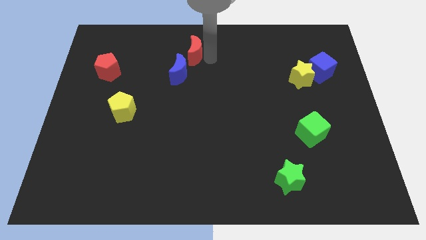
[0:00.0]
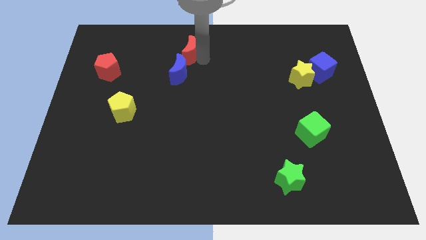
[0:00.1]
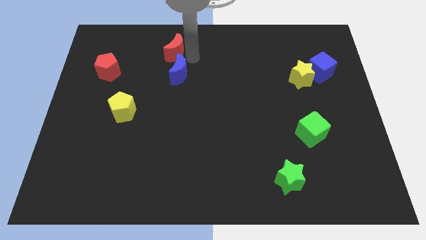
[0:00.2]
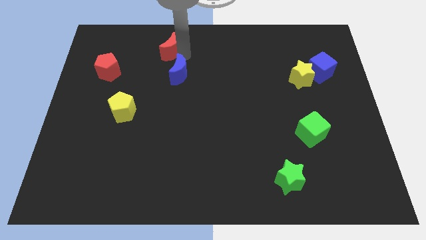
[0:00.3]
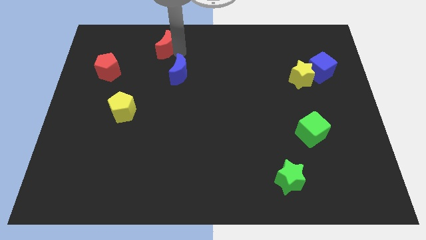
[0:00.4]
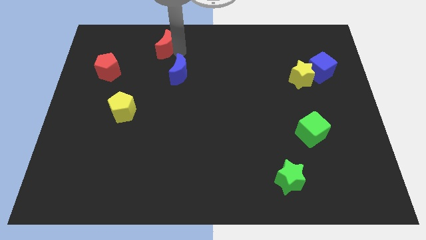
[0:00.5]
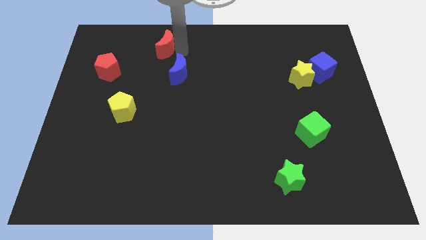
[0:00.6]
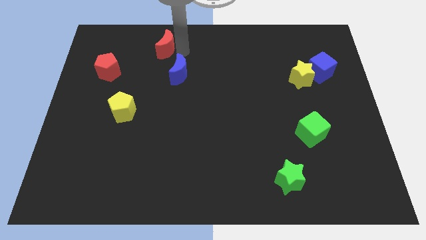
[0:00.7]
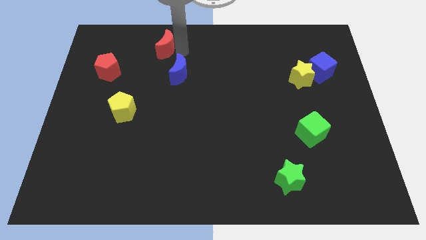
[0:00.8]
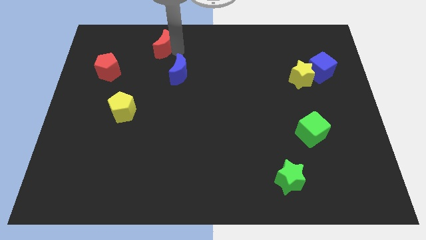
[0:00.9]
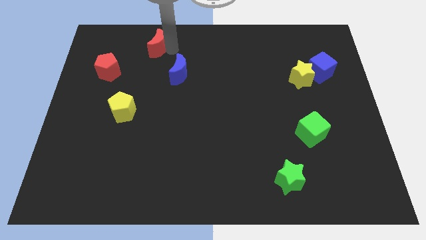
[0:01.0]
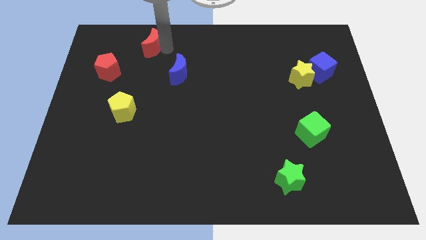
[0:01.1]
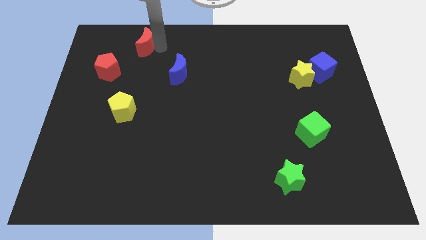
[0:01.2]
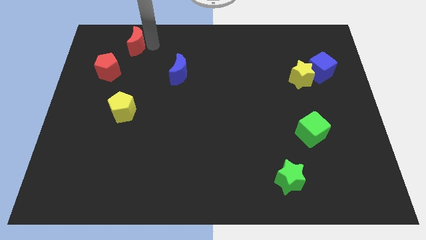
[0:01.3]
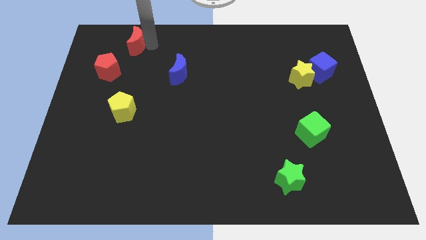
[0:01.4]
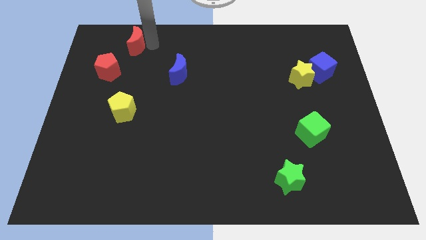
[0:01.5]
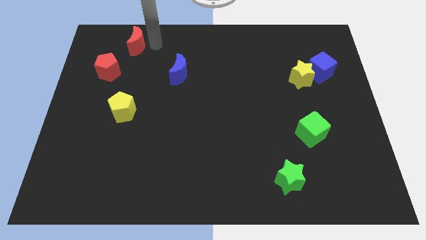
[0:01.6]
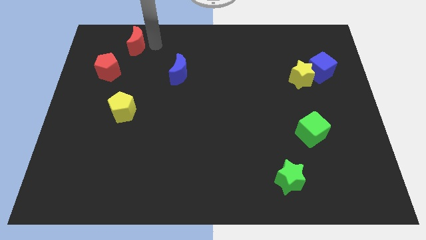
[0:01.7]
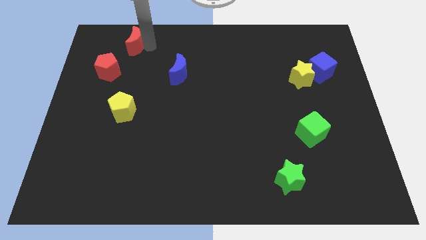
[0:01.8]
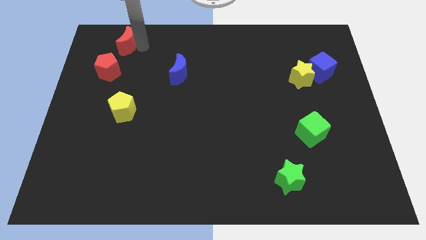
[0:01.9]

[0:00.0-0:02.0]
push the red crescent to the top right of the red pentagon

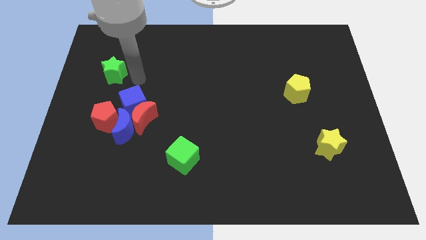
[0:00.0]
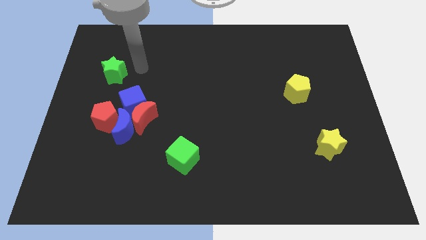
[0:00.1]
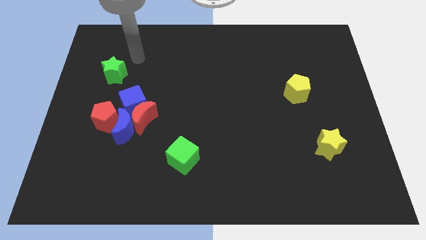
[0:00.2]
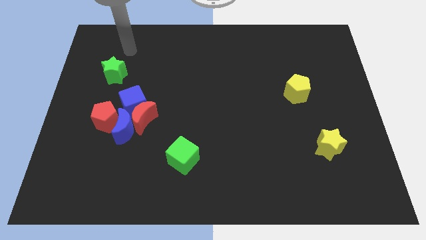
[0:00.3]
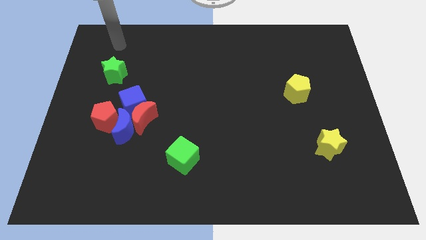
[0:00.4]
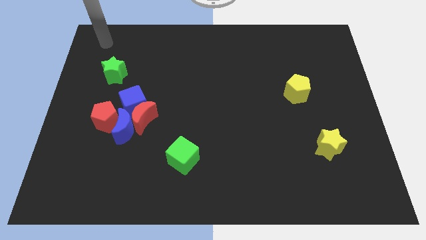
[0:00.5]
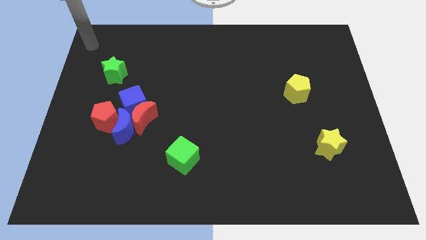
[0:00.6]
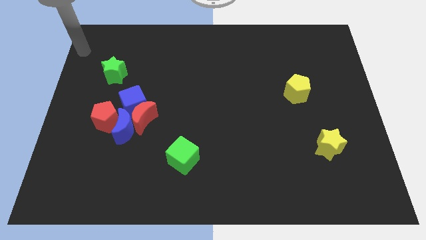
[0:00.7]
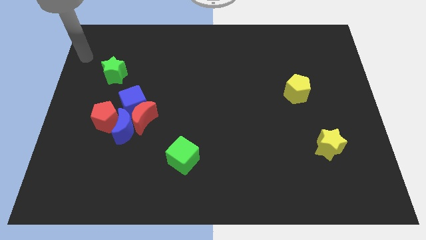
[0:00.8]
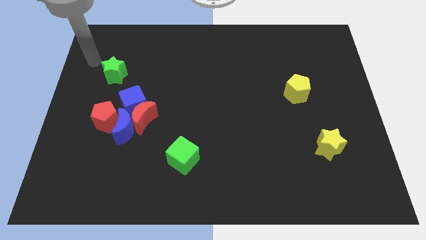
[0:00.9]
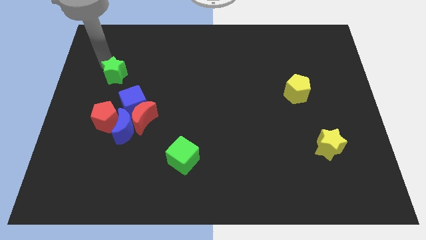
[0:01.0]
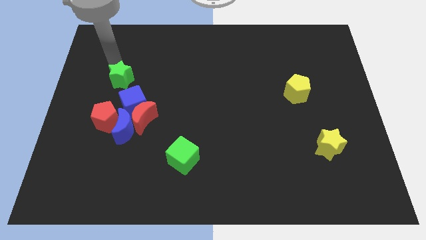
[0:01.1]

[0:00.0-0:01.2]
move your arm to the green star

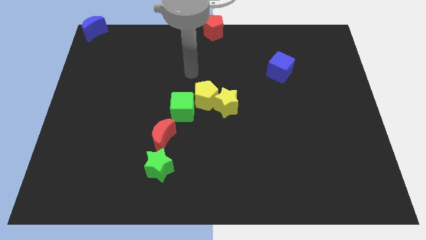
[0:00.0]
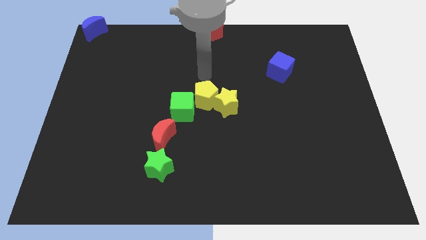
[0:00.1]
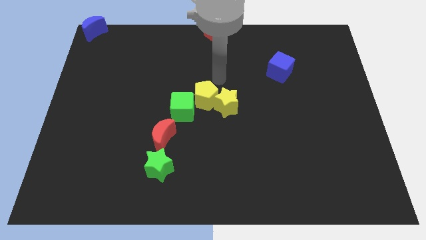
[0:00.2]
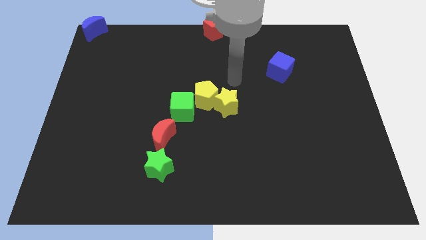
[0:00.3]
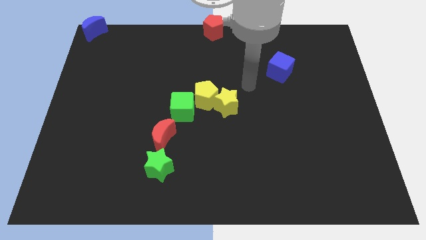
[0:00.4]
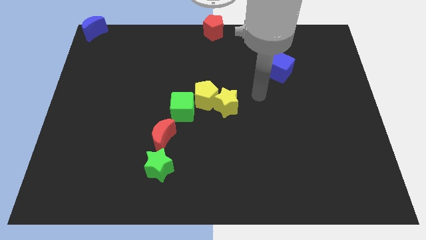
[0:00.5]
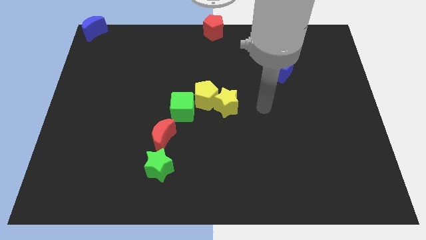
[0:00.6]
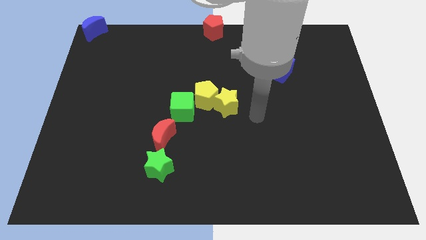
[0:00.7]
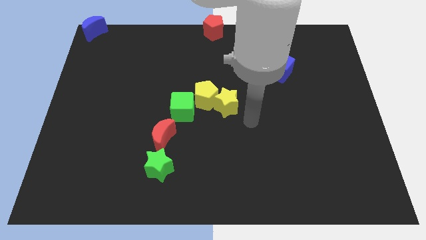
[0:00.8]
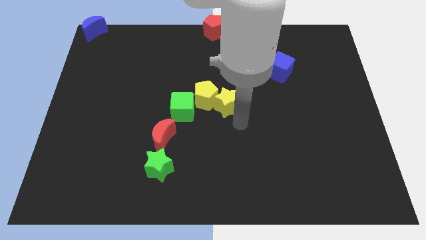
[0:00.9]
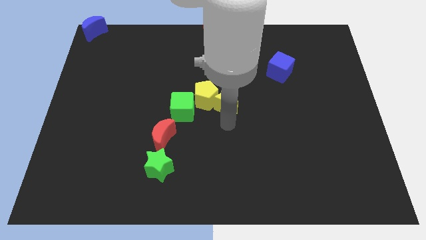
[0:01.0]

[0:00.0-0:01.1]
place your arm at the bottom of the yellow star

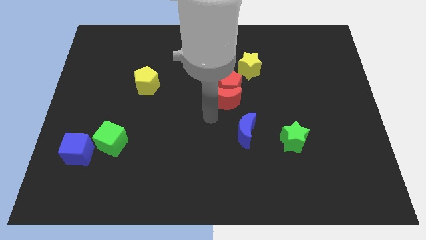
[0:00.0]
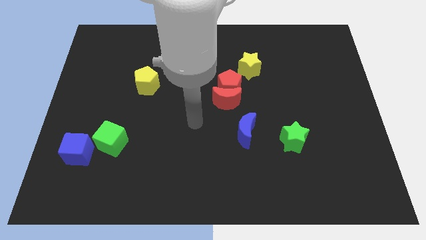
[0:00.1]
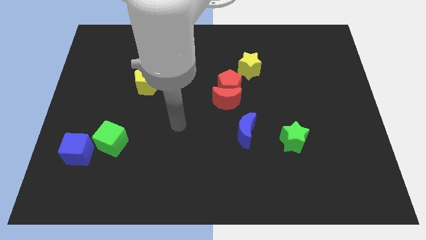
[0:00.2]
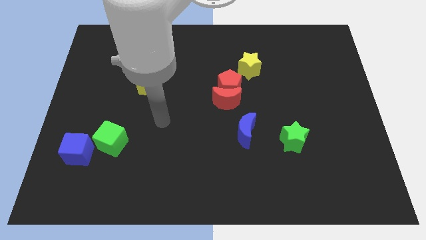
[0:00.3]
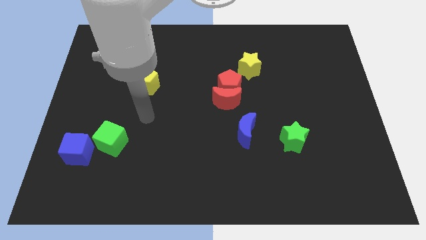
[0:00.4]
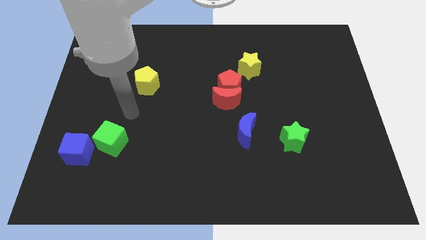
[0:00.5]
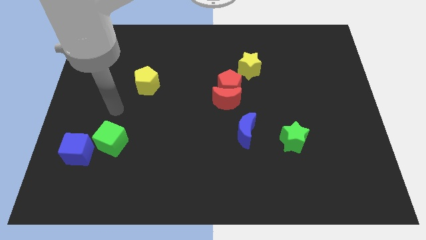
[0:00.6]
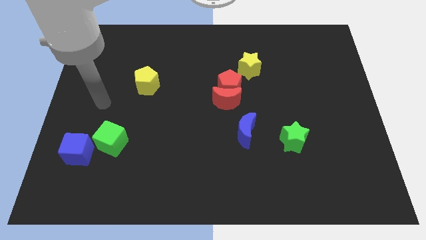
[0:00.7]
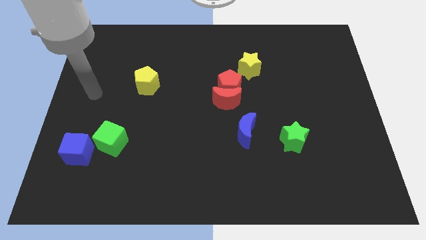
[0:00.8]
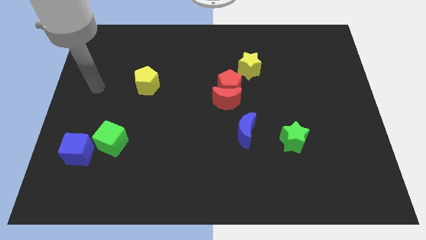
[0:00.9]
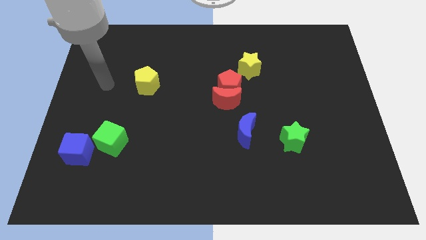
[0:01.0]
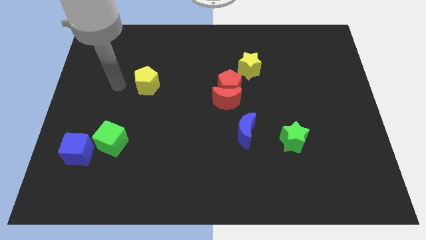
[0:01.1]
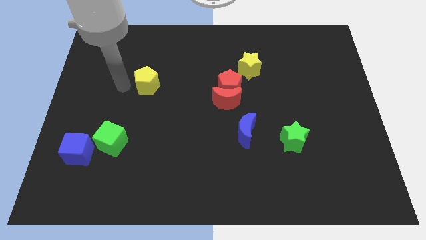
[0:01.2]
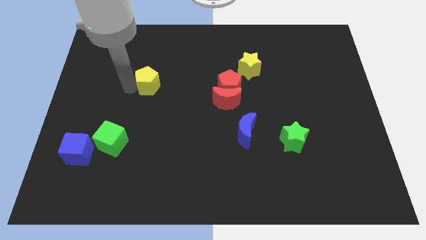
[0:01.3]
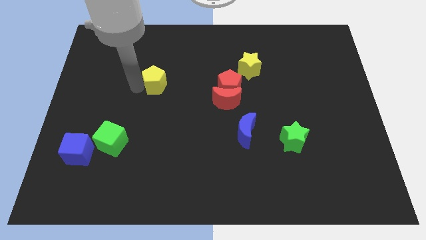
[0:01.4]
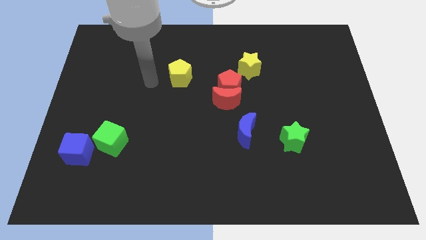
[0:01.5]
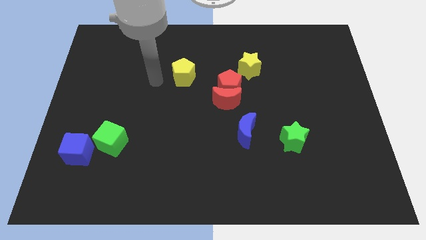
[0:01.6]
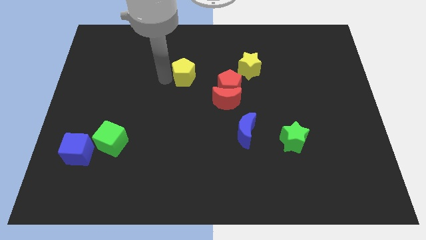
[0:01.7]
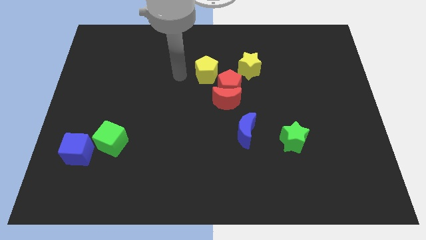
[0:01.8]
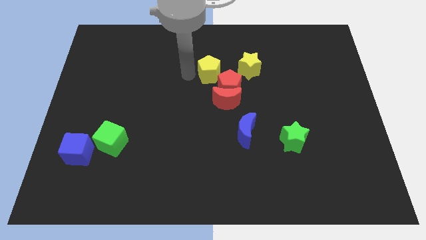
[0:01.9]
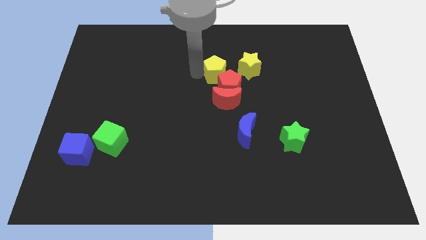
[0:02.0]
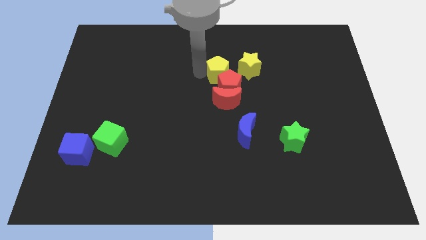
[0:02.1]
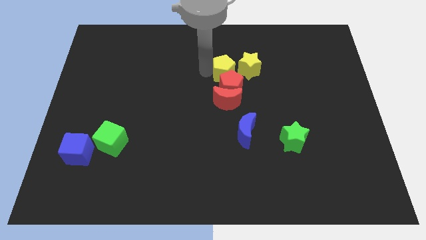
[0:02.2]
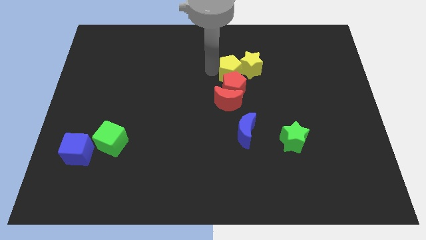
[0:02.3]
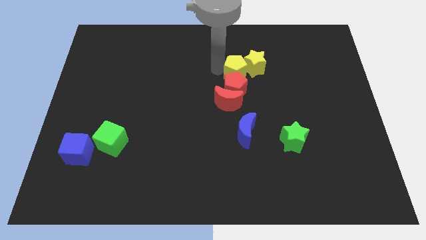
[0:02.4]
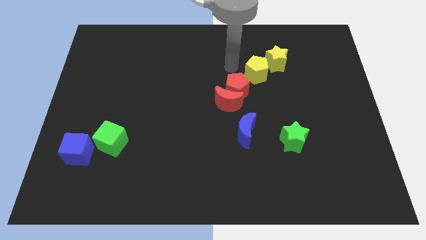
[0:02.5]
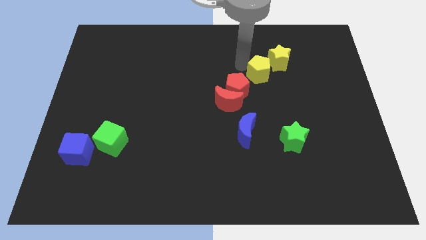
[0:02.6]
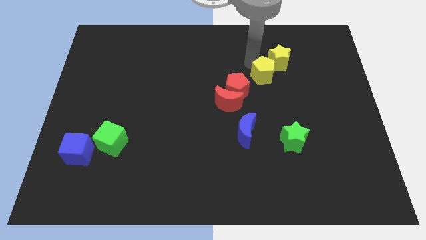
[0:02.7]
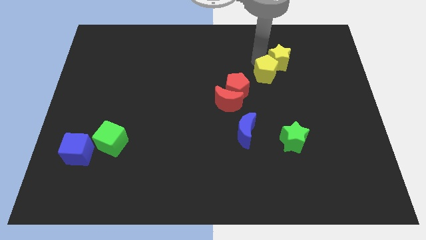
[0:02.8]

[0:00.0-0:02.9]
push the yellow pentagon to the top right of the red pentagon

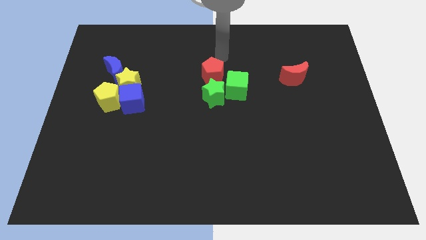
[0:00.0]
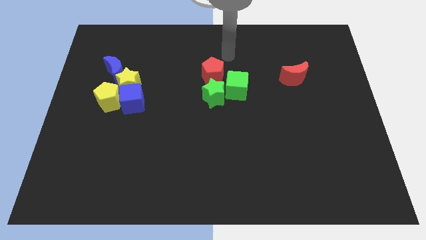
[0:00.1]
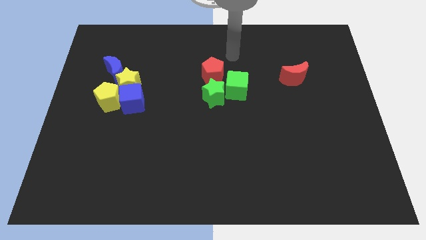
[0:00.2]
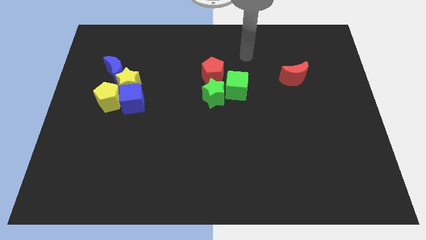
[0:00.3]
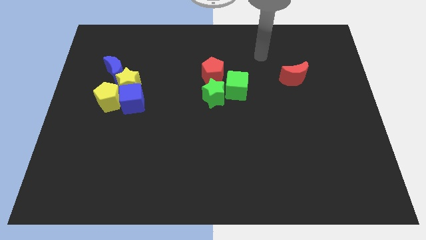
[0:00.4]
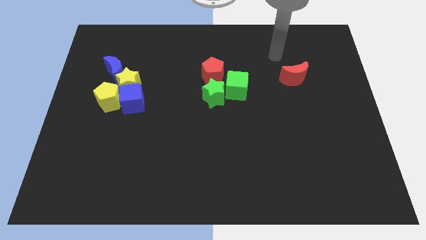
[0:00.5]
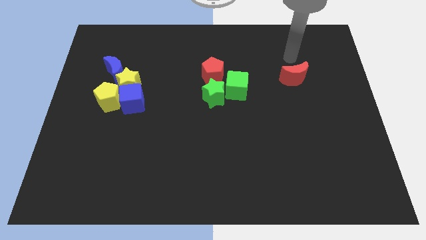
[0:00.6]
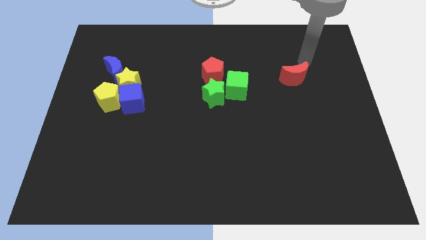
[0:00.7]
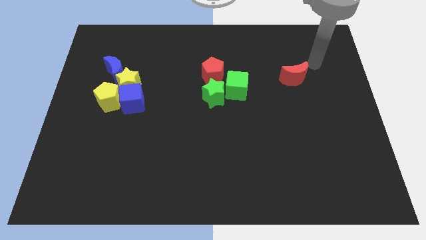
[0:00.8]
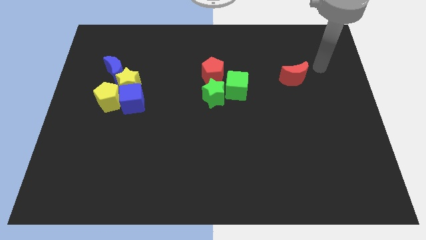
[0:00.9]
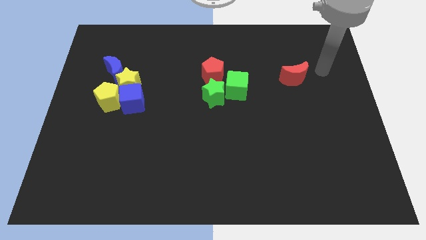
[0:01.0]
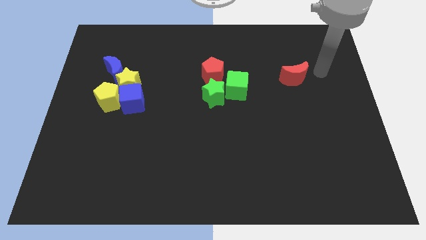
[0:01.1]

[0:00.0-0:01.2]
place your arm to the right of the red moon

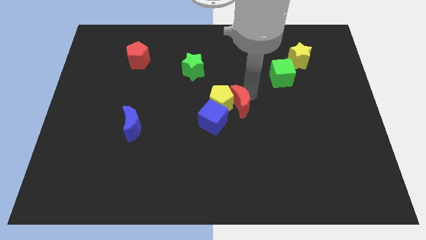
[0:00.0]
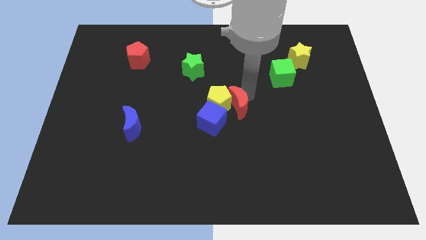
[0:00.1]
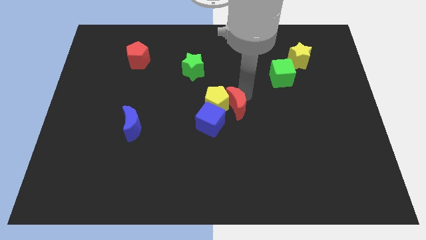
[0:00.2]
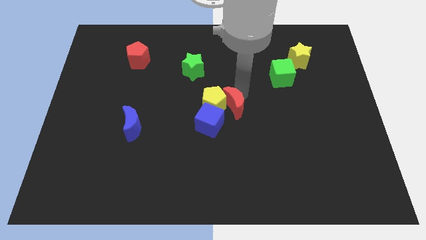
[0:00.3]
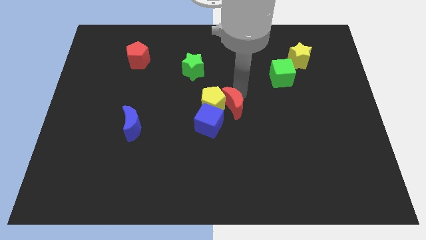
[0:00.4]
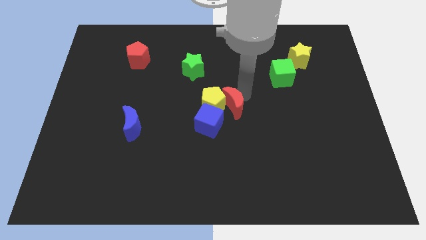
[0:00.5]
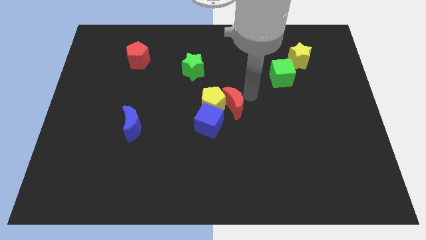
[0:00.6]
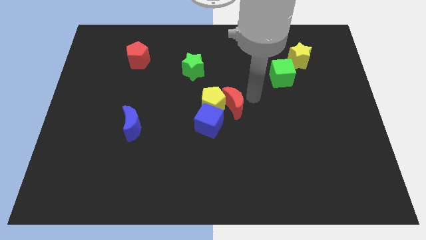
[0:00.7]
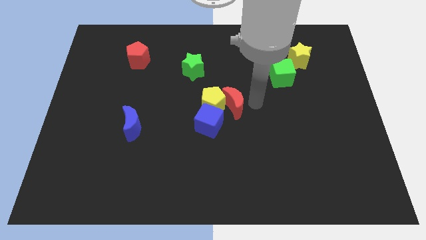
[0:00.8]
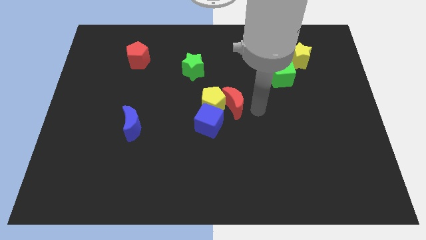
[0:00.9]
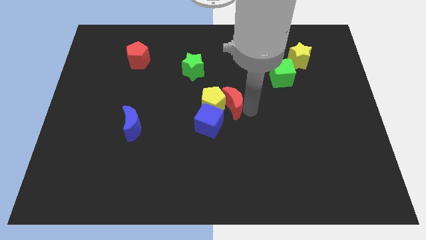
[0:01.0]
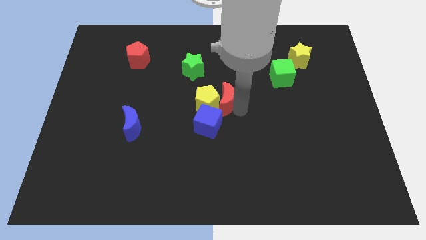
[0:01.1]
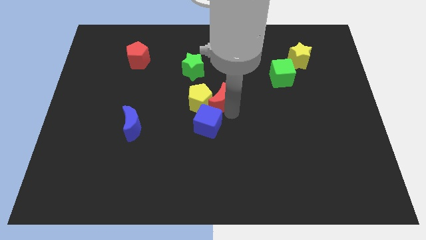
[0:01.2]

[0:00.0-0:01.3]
adjust the group of blocks at the center of the table
